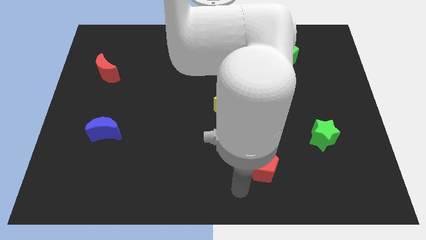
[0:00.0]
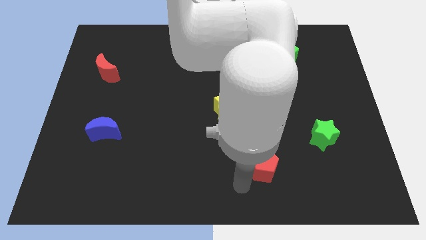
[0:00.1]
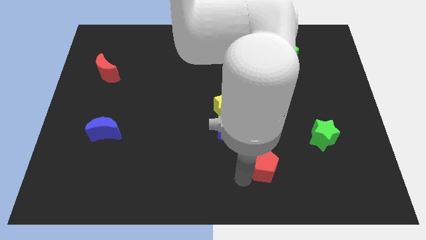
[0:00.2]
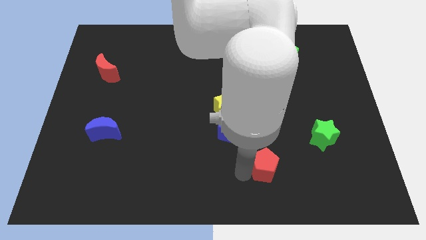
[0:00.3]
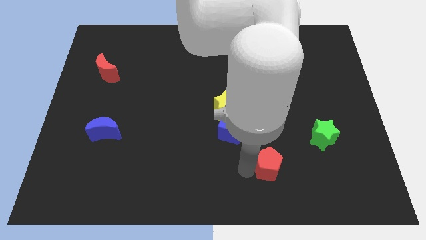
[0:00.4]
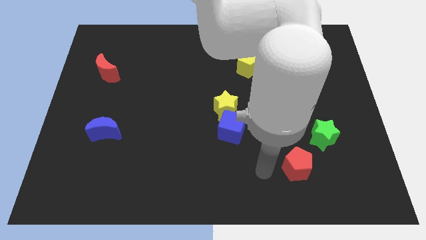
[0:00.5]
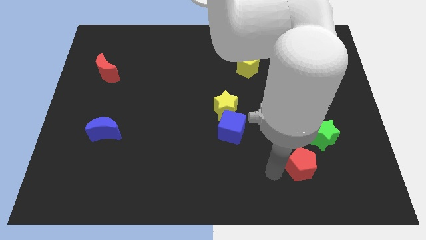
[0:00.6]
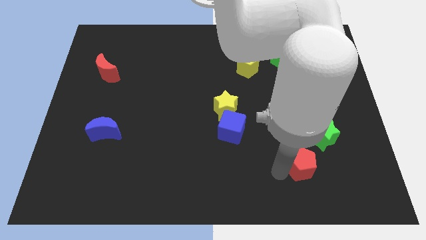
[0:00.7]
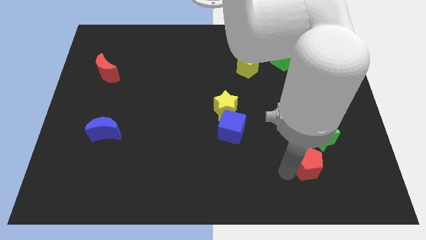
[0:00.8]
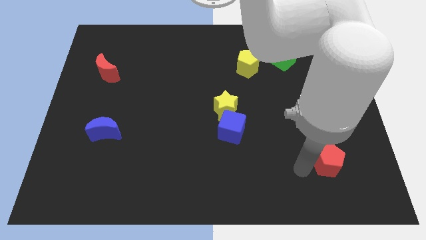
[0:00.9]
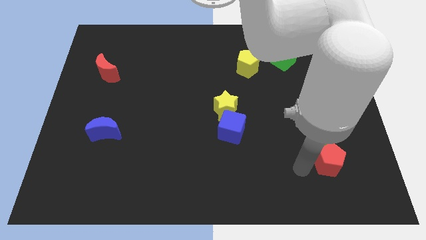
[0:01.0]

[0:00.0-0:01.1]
place the red pentagon under the green star

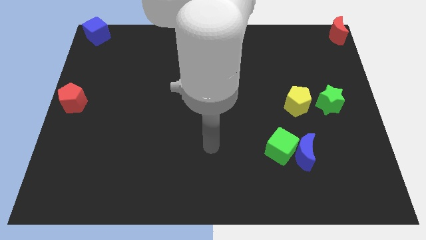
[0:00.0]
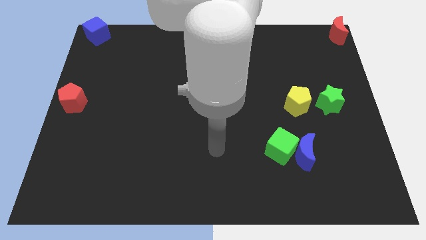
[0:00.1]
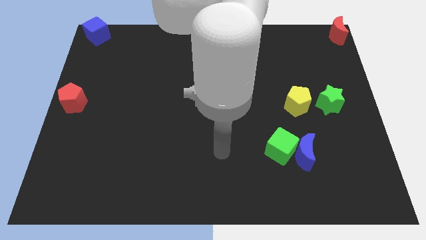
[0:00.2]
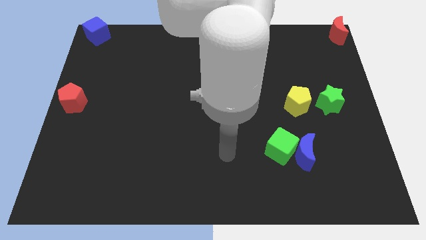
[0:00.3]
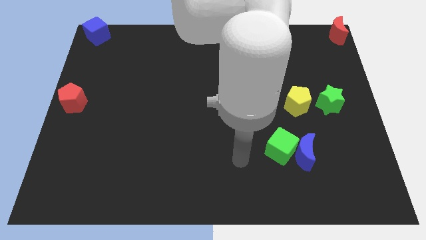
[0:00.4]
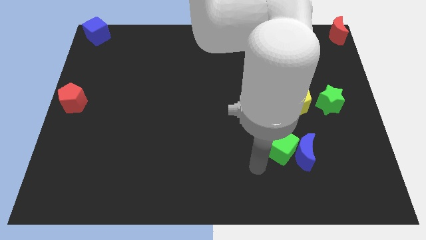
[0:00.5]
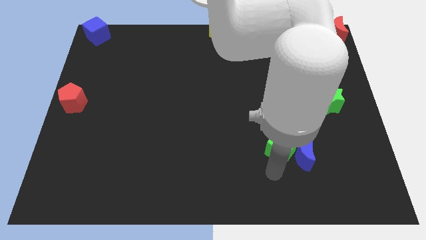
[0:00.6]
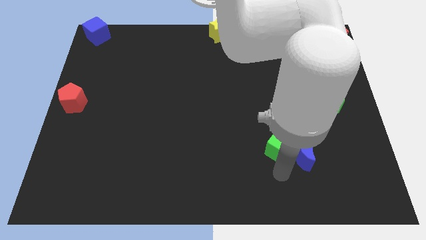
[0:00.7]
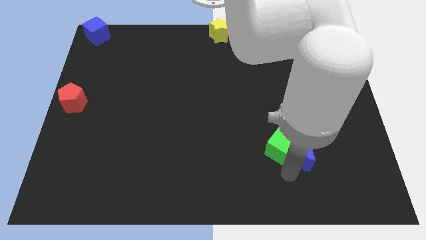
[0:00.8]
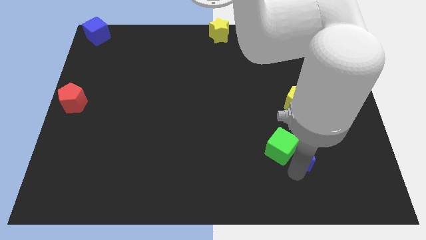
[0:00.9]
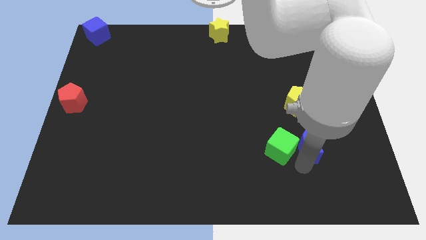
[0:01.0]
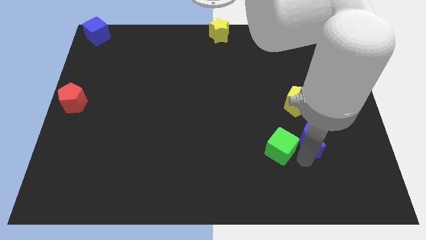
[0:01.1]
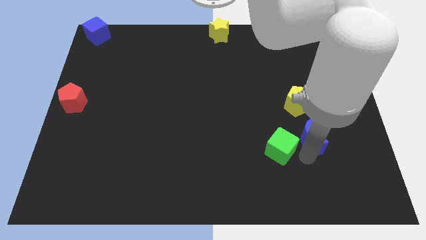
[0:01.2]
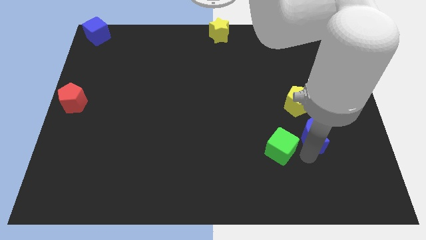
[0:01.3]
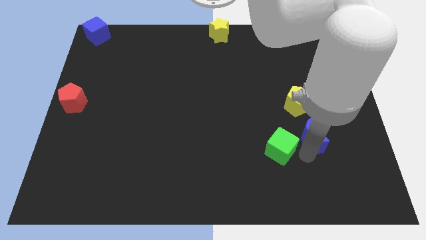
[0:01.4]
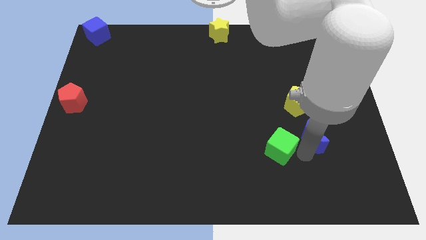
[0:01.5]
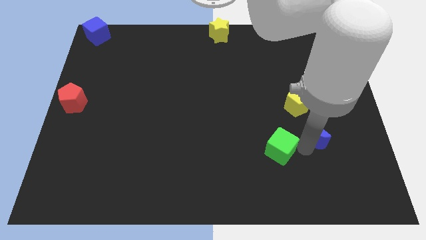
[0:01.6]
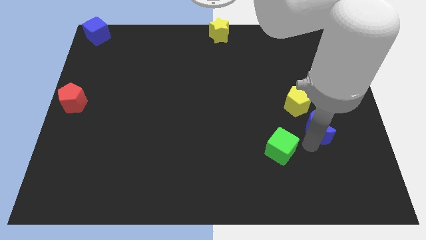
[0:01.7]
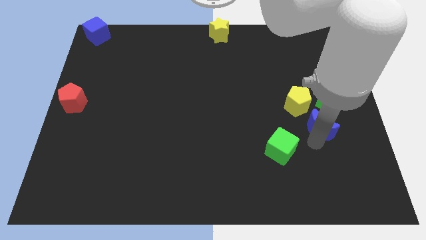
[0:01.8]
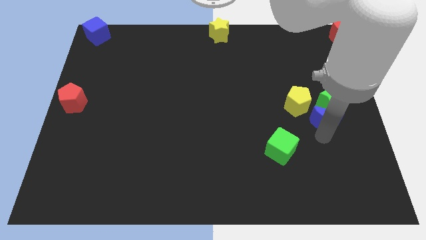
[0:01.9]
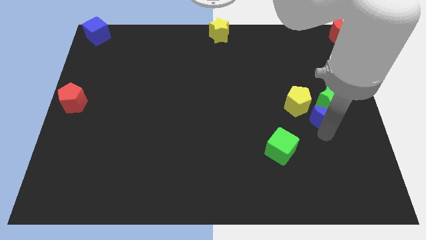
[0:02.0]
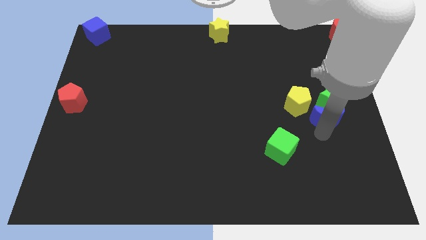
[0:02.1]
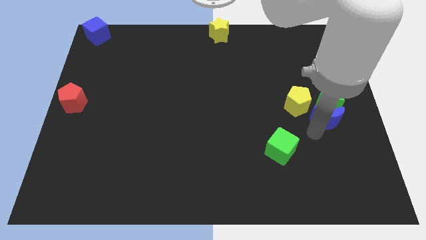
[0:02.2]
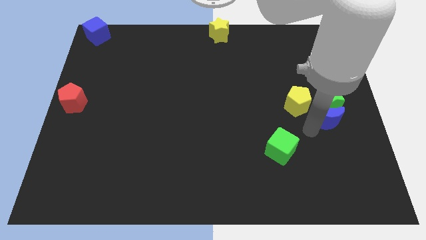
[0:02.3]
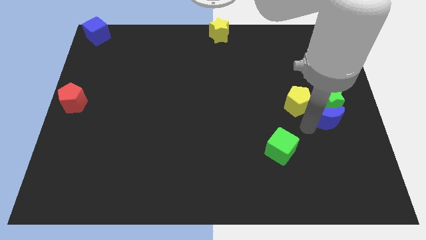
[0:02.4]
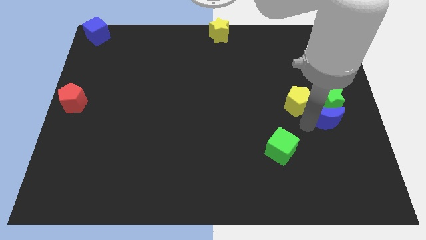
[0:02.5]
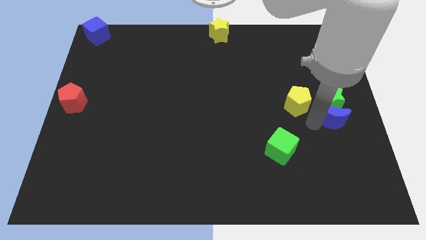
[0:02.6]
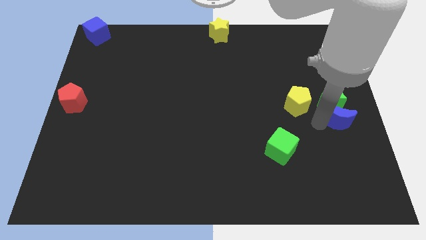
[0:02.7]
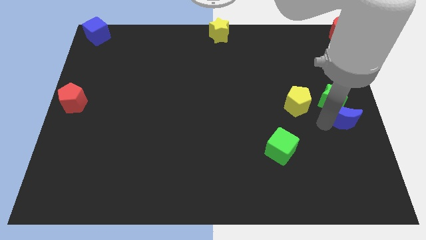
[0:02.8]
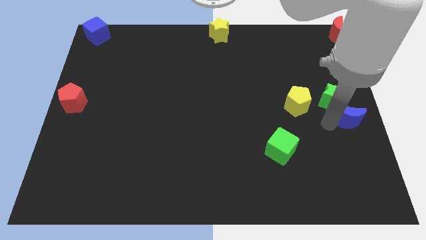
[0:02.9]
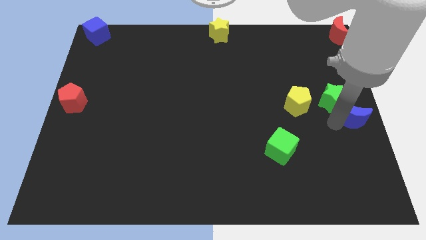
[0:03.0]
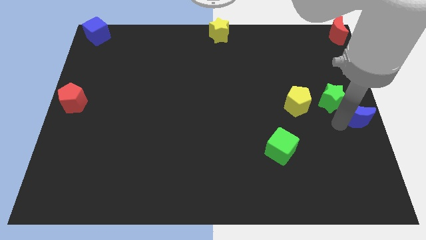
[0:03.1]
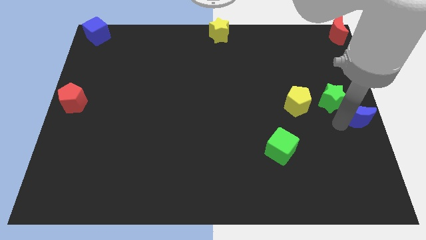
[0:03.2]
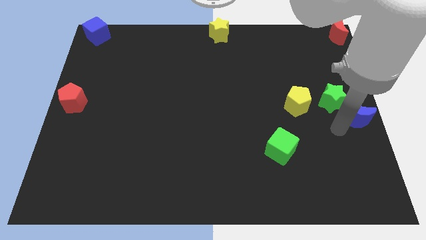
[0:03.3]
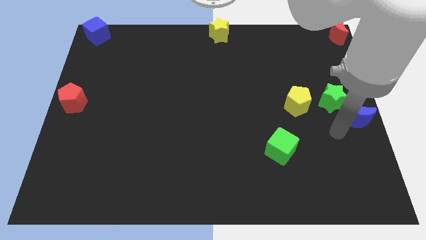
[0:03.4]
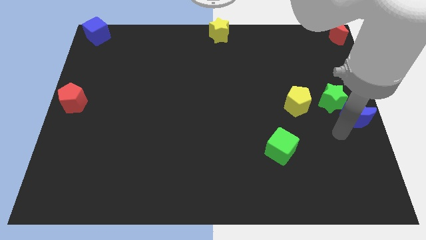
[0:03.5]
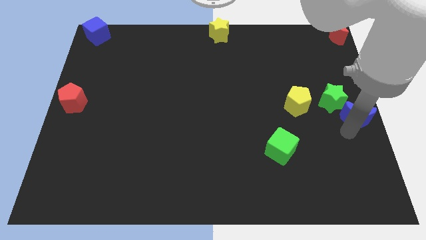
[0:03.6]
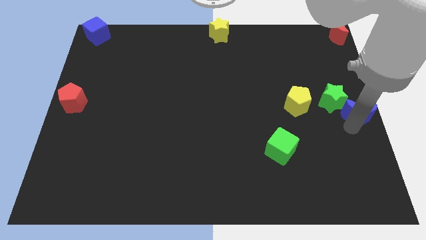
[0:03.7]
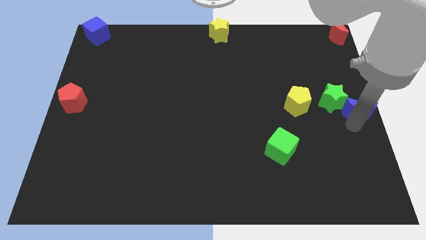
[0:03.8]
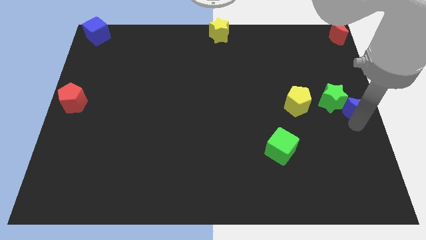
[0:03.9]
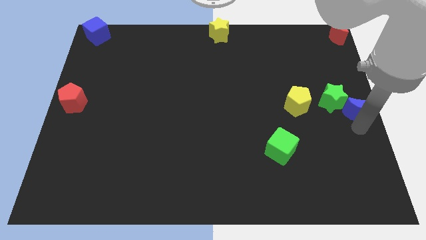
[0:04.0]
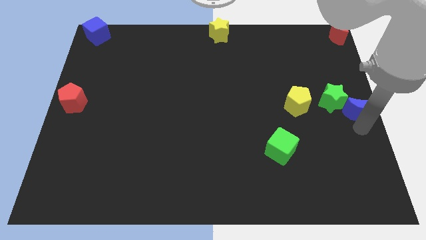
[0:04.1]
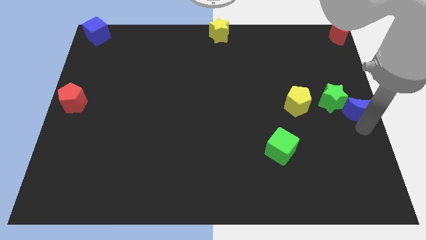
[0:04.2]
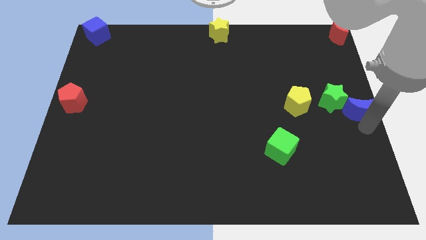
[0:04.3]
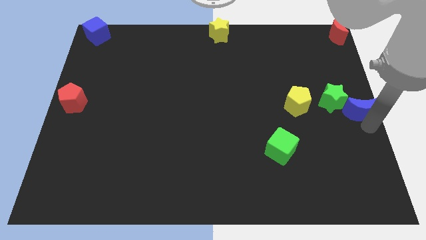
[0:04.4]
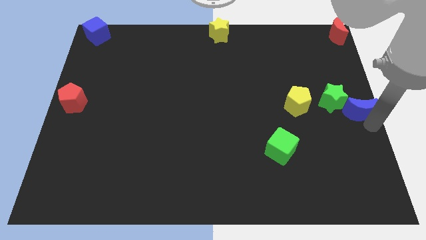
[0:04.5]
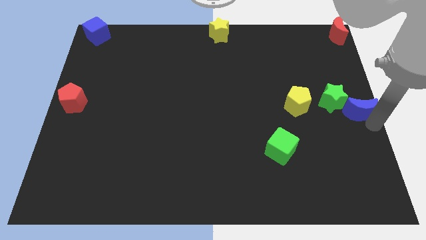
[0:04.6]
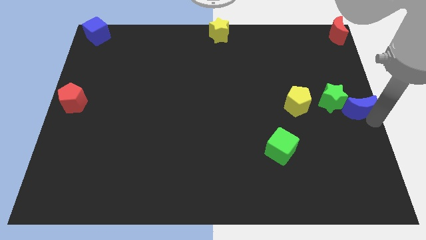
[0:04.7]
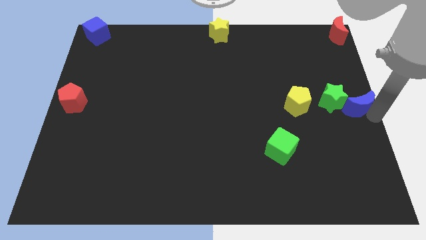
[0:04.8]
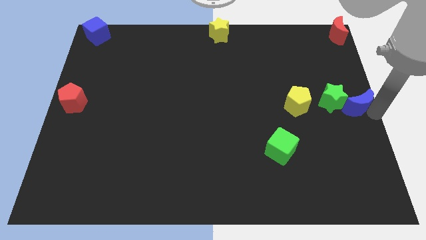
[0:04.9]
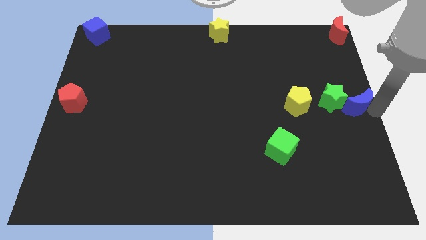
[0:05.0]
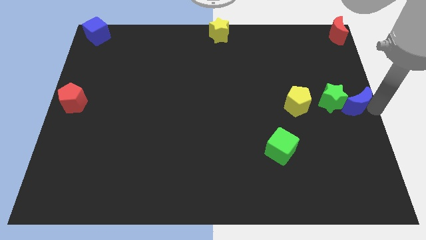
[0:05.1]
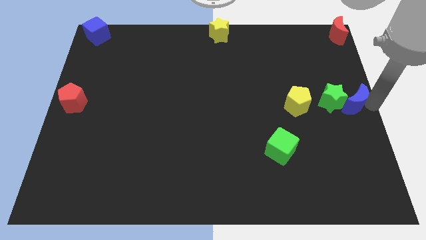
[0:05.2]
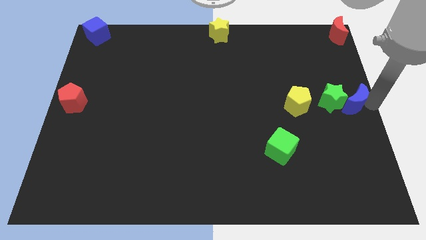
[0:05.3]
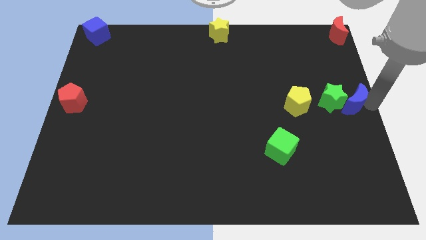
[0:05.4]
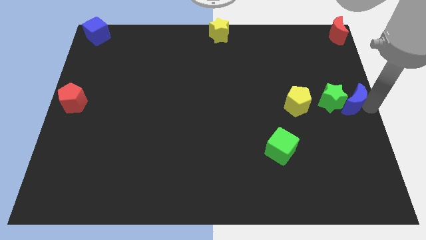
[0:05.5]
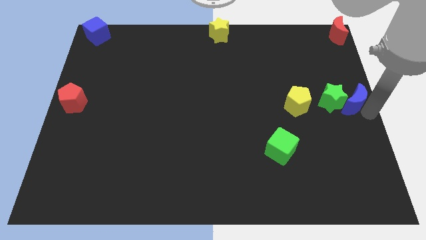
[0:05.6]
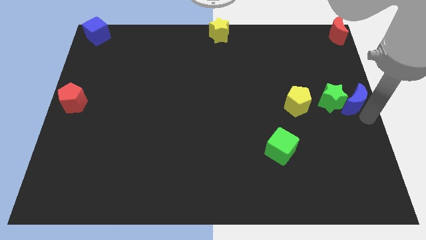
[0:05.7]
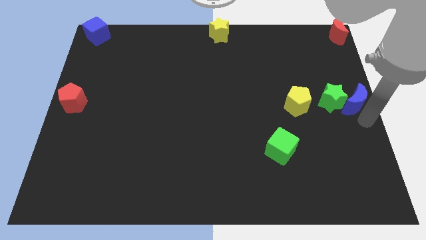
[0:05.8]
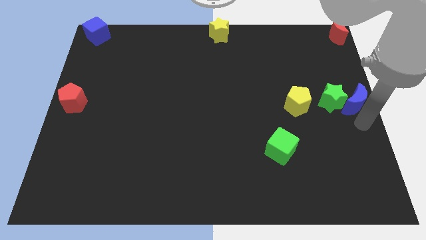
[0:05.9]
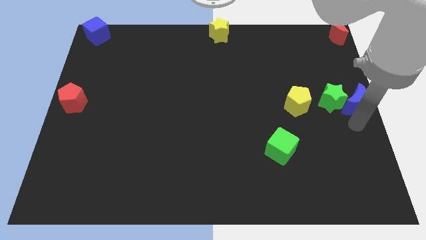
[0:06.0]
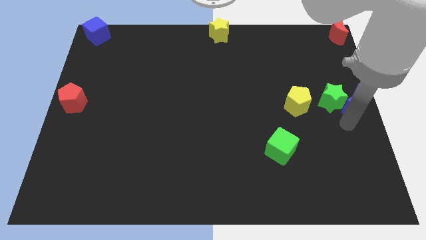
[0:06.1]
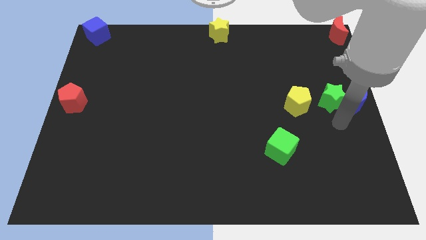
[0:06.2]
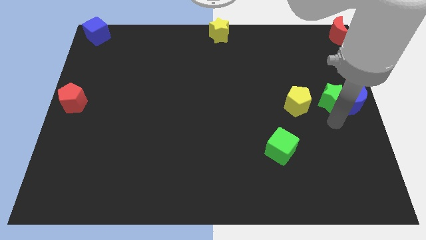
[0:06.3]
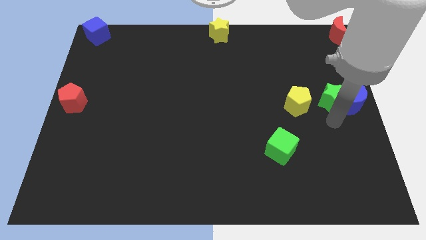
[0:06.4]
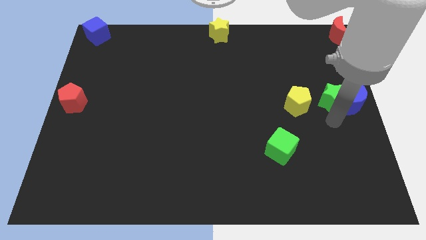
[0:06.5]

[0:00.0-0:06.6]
push the blue crescent to the center right of the board

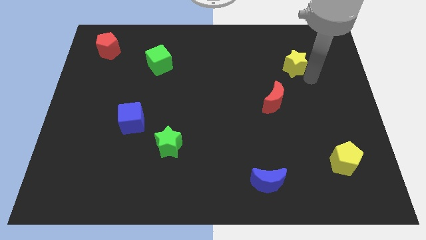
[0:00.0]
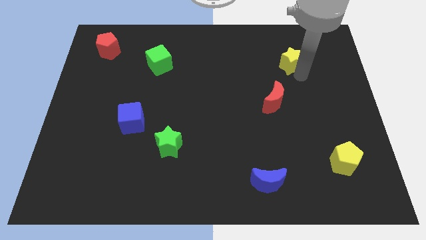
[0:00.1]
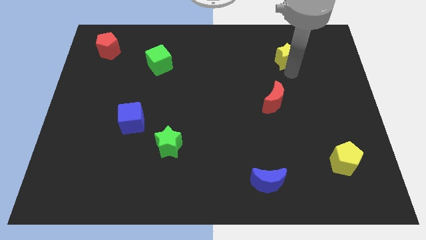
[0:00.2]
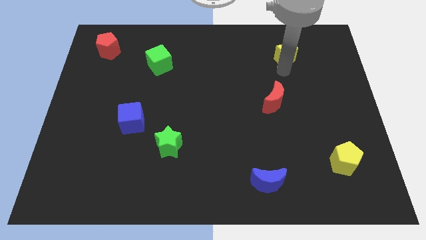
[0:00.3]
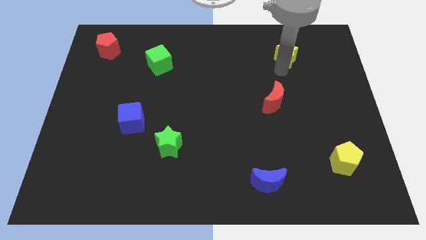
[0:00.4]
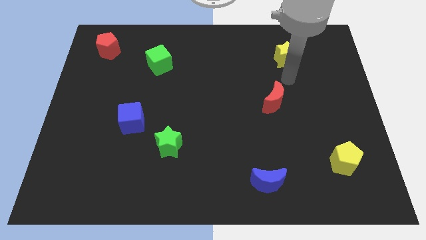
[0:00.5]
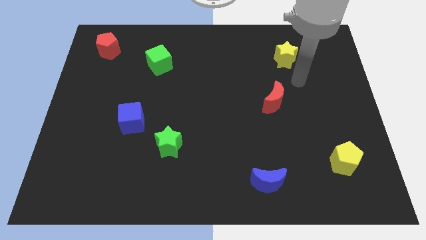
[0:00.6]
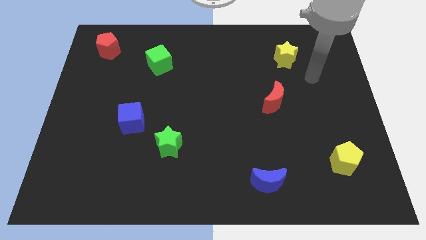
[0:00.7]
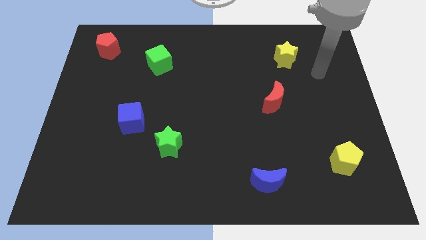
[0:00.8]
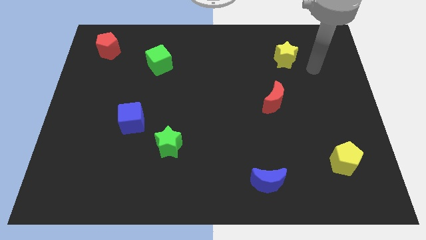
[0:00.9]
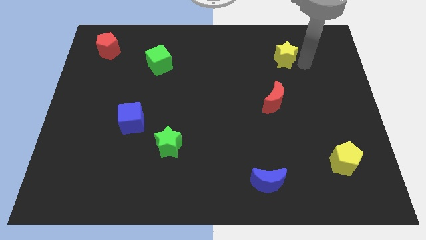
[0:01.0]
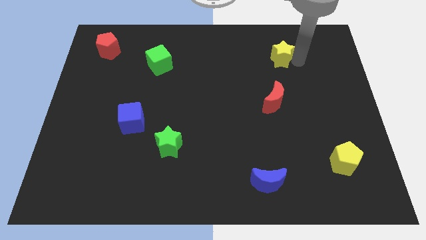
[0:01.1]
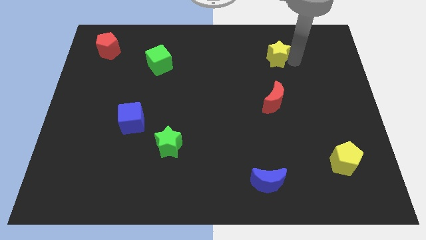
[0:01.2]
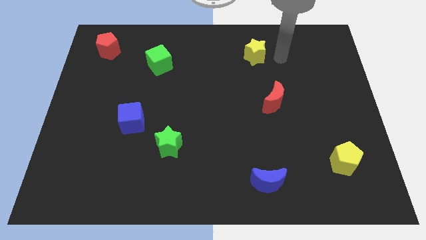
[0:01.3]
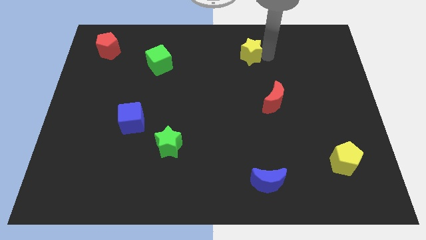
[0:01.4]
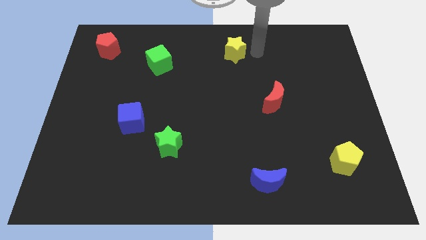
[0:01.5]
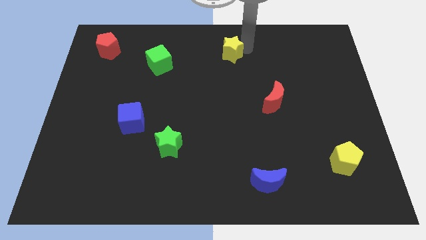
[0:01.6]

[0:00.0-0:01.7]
place the yellow star at the top center of the board
